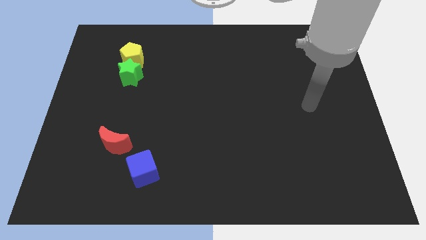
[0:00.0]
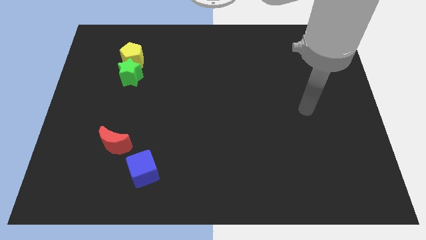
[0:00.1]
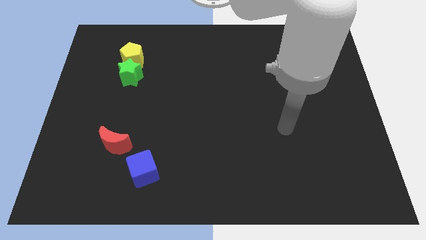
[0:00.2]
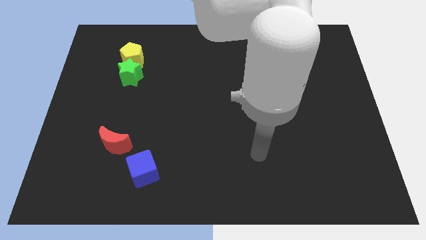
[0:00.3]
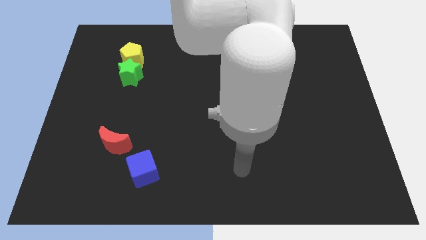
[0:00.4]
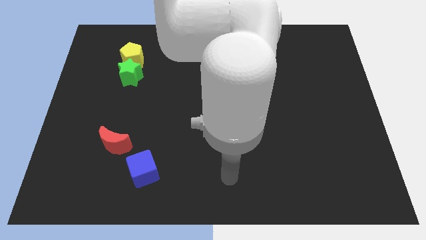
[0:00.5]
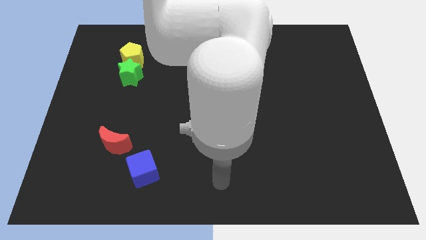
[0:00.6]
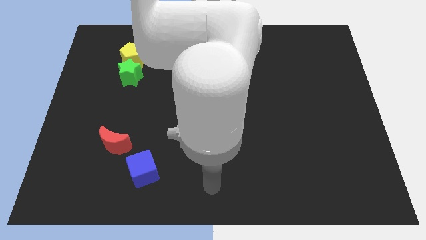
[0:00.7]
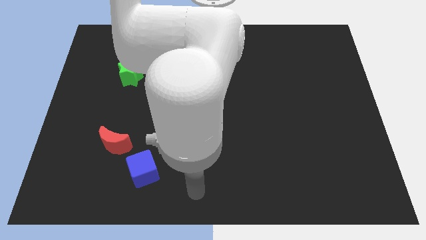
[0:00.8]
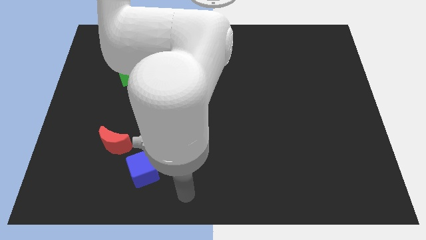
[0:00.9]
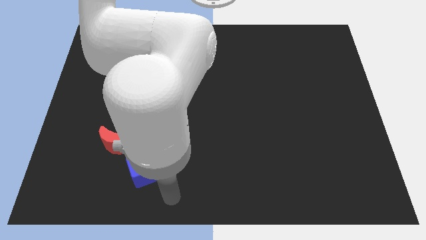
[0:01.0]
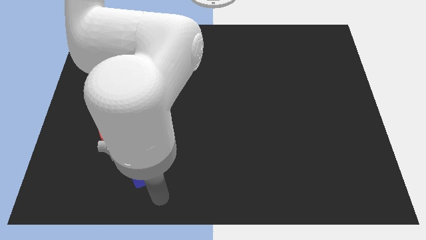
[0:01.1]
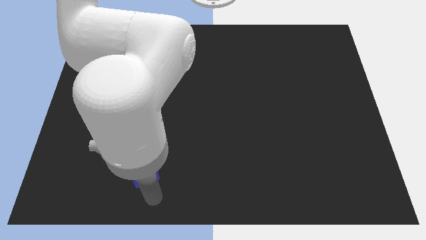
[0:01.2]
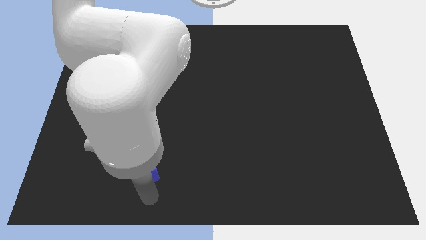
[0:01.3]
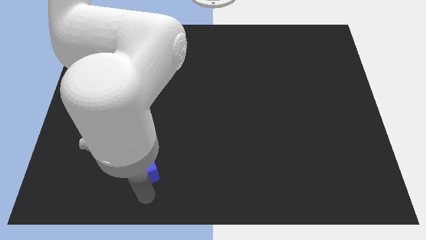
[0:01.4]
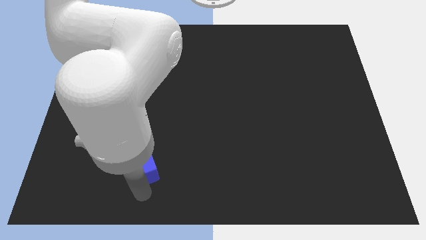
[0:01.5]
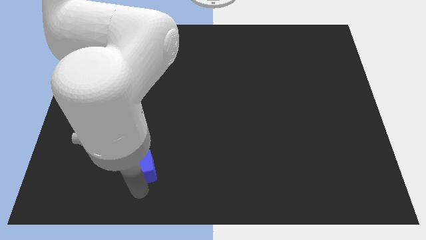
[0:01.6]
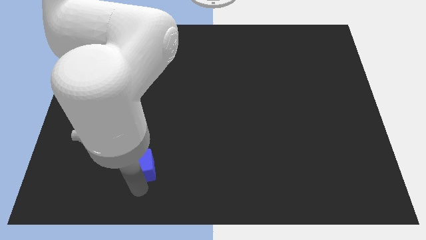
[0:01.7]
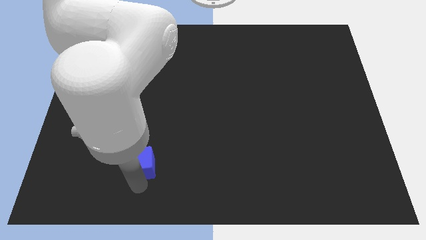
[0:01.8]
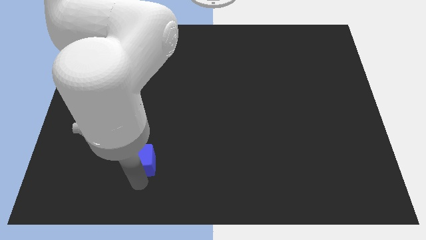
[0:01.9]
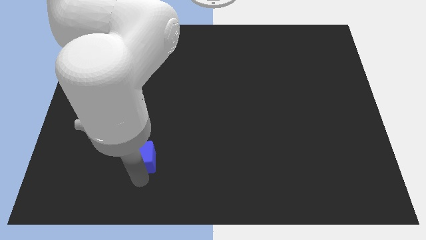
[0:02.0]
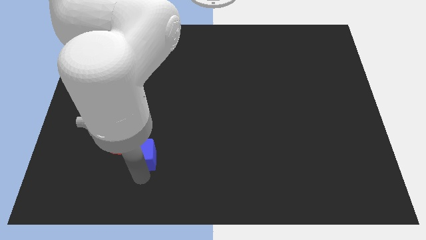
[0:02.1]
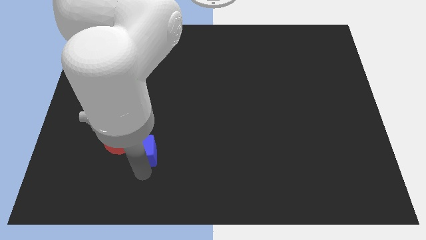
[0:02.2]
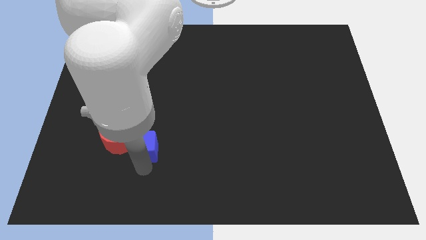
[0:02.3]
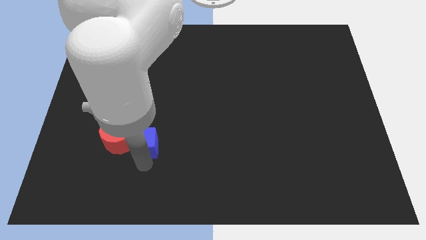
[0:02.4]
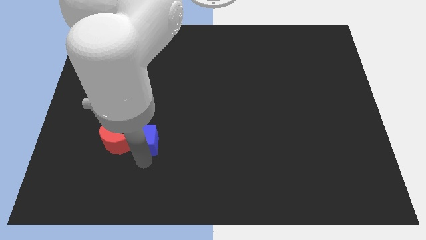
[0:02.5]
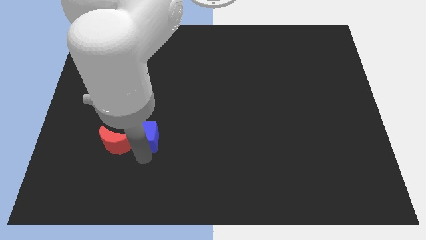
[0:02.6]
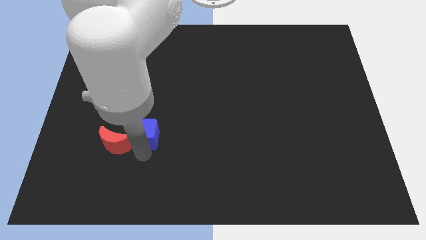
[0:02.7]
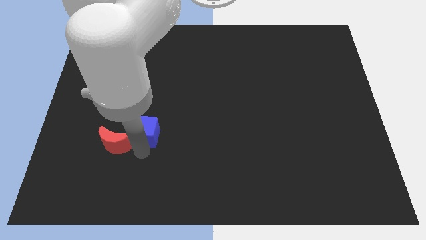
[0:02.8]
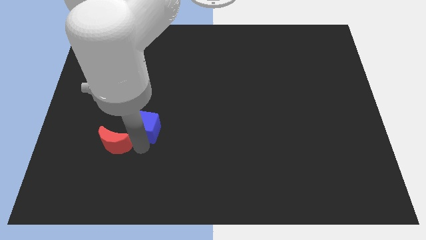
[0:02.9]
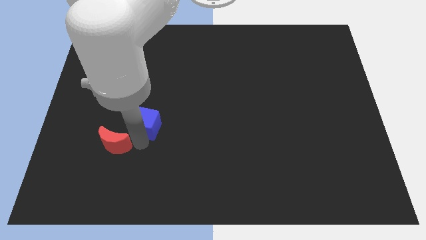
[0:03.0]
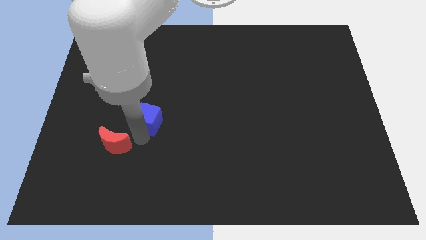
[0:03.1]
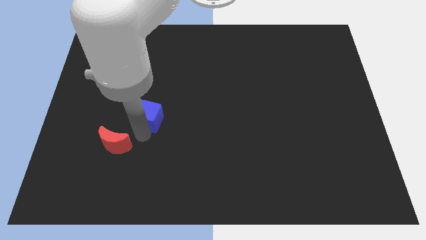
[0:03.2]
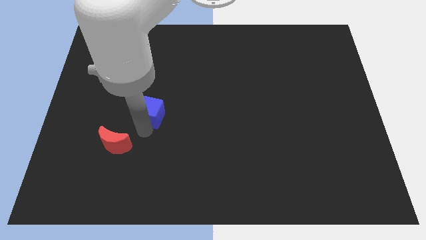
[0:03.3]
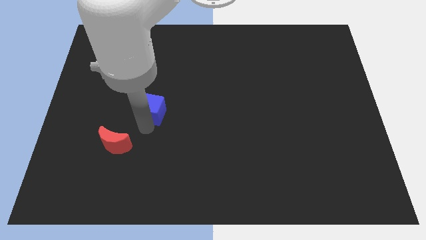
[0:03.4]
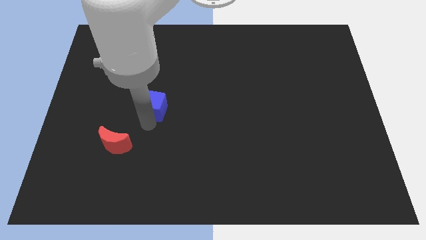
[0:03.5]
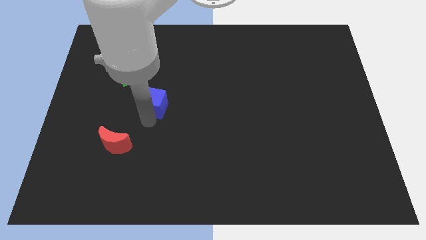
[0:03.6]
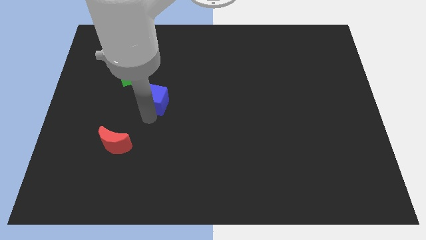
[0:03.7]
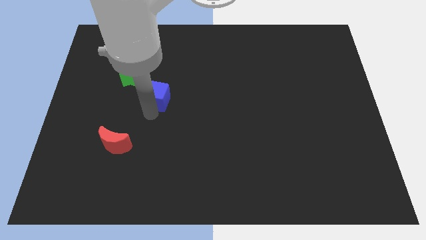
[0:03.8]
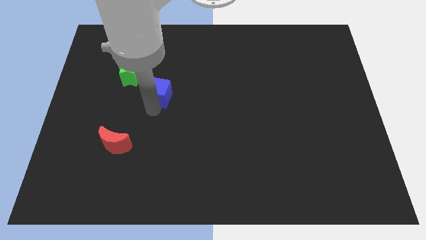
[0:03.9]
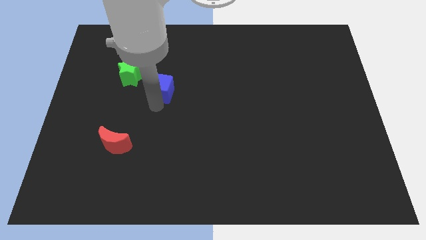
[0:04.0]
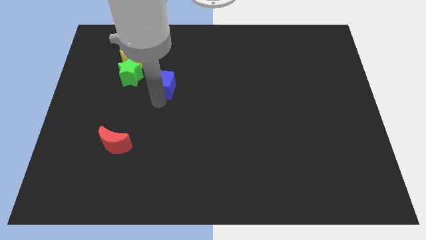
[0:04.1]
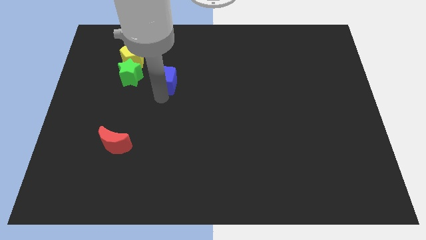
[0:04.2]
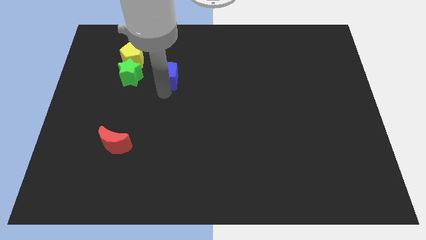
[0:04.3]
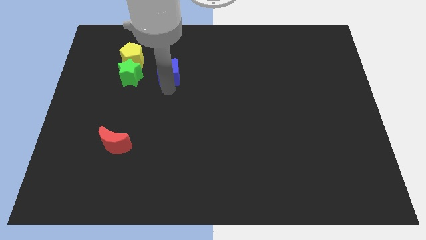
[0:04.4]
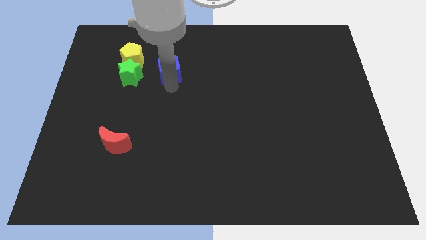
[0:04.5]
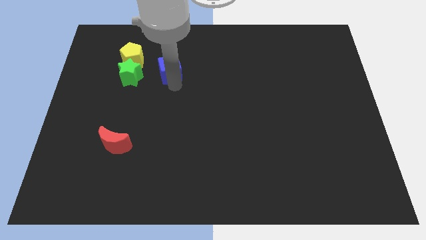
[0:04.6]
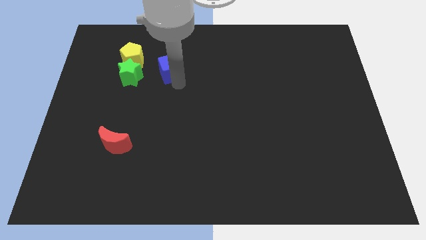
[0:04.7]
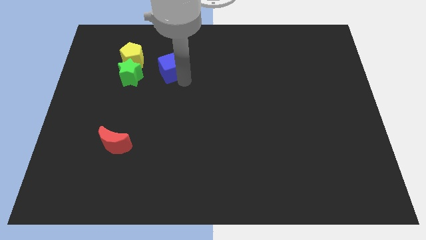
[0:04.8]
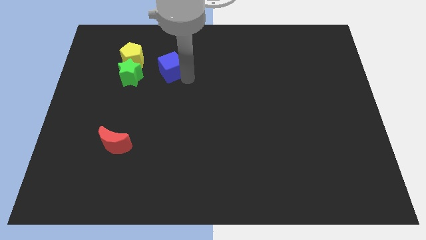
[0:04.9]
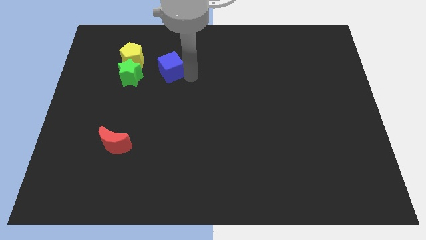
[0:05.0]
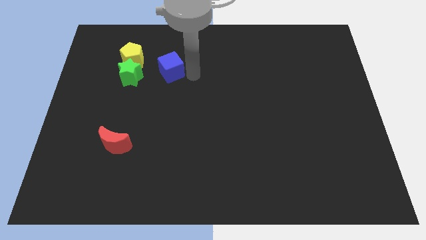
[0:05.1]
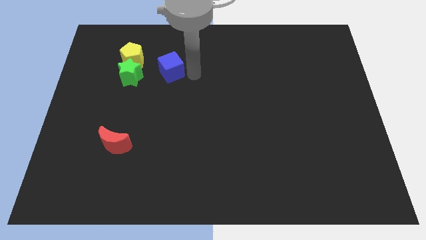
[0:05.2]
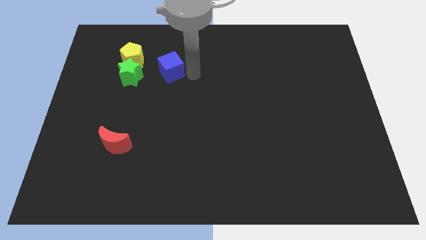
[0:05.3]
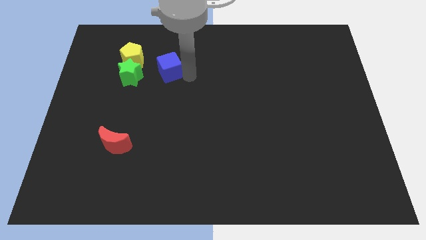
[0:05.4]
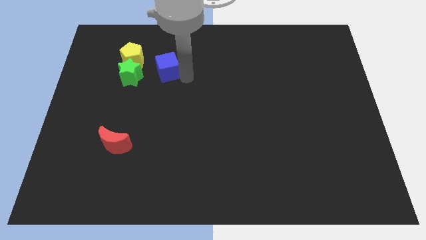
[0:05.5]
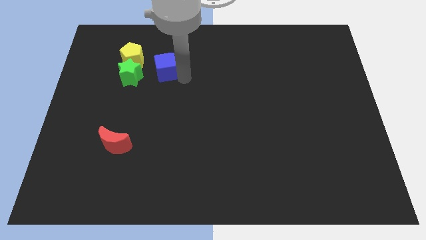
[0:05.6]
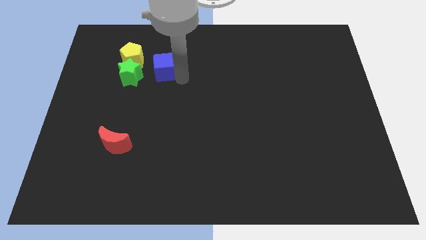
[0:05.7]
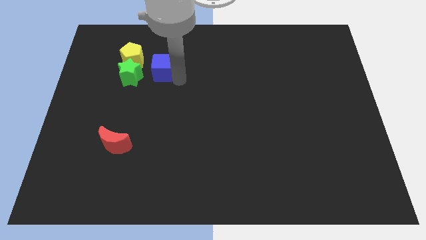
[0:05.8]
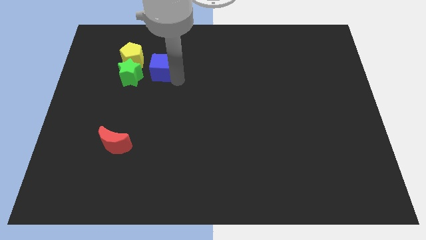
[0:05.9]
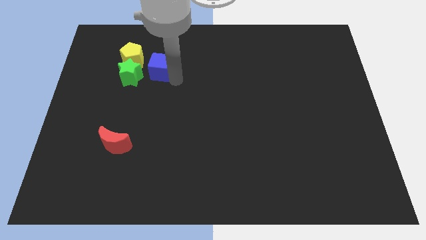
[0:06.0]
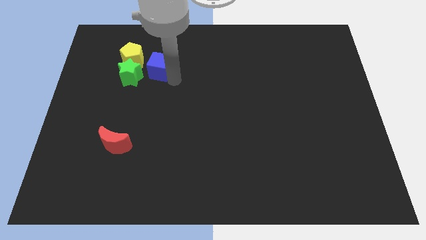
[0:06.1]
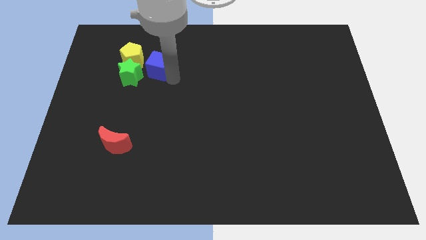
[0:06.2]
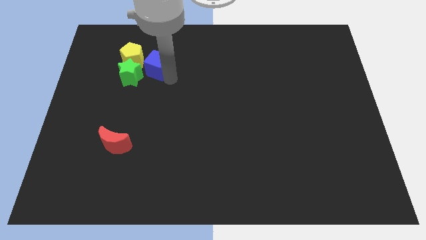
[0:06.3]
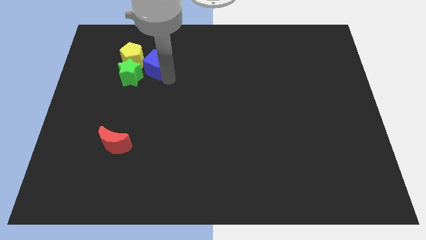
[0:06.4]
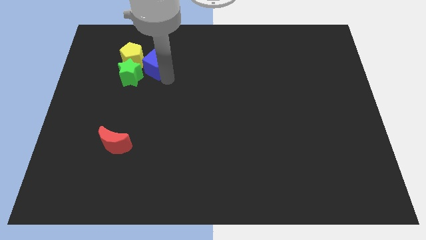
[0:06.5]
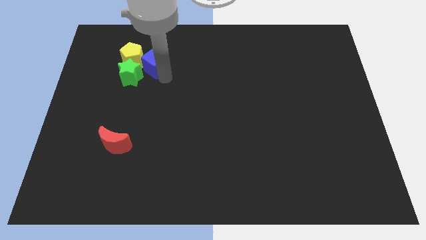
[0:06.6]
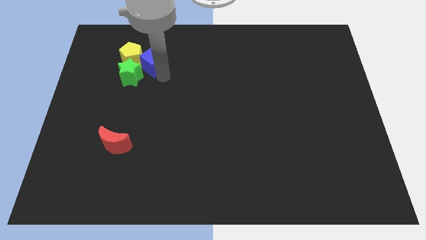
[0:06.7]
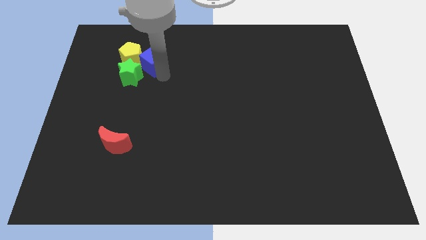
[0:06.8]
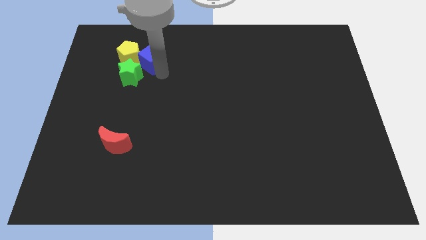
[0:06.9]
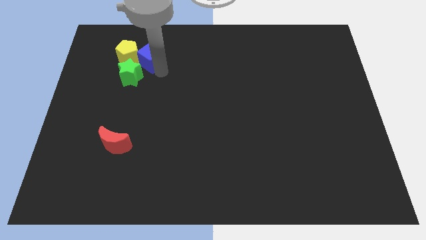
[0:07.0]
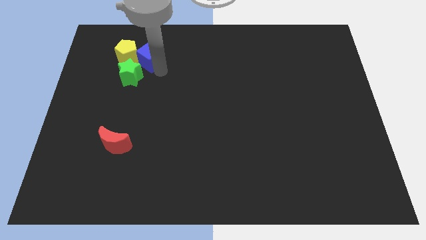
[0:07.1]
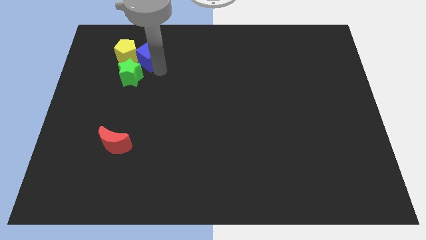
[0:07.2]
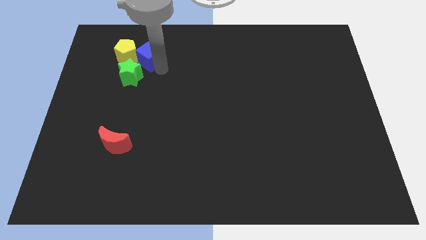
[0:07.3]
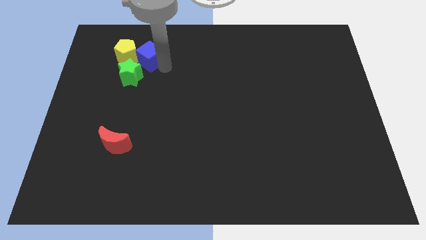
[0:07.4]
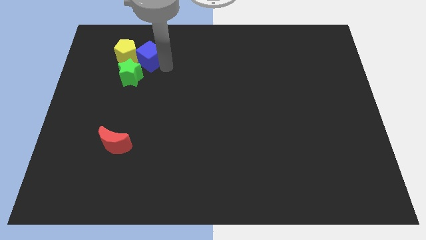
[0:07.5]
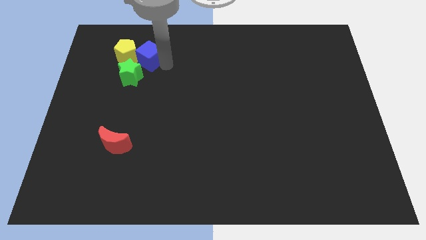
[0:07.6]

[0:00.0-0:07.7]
slide the cube to the yellow block

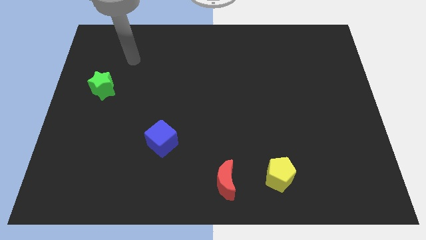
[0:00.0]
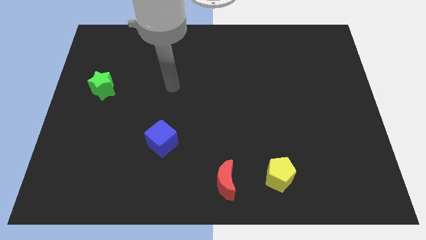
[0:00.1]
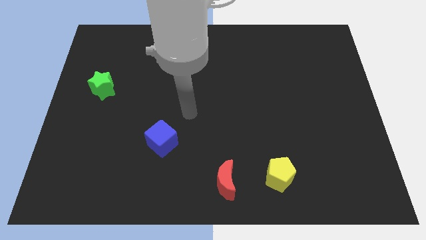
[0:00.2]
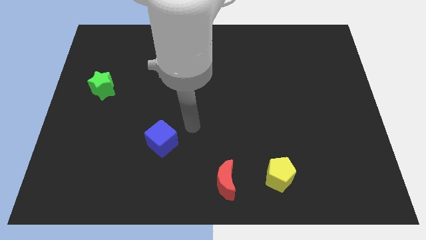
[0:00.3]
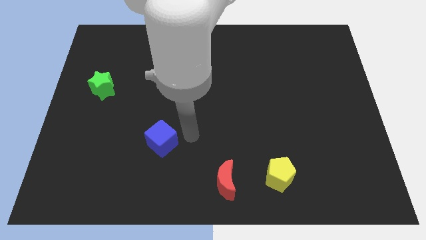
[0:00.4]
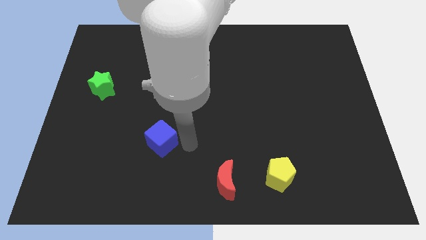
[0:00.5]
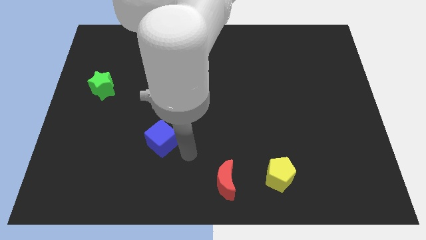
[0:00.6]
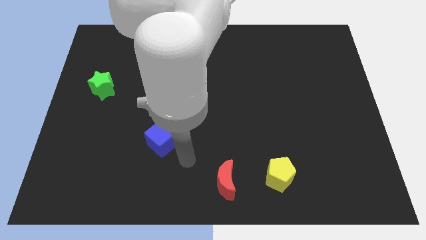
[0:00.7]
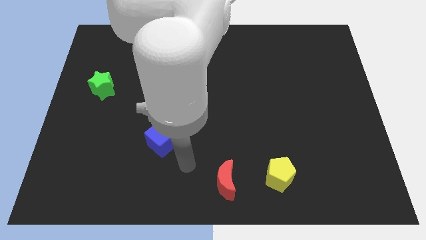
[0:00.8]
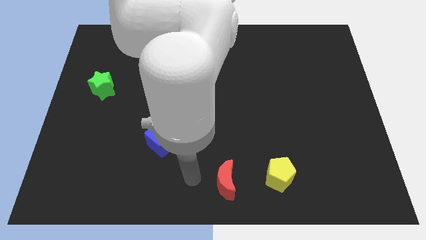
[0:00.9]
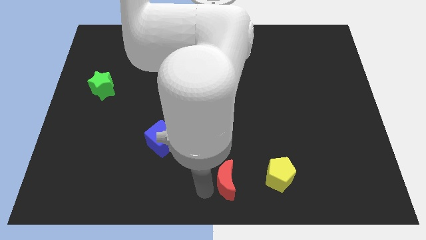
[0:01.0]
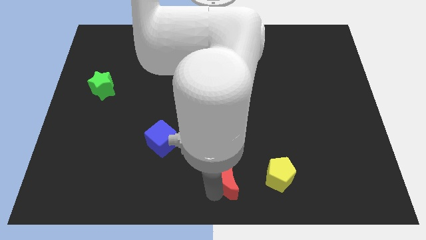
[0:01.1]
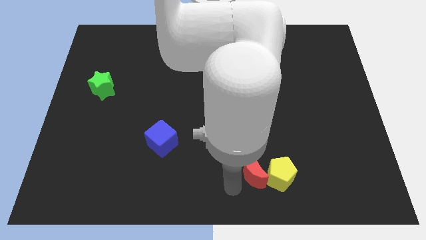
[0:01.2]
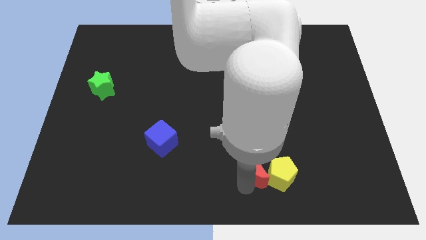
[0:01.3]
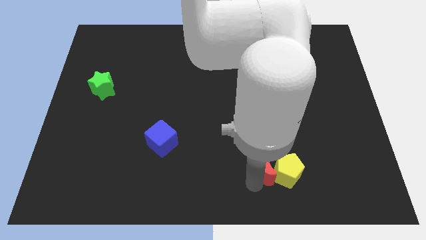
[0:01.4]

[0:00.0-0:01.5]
put the moon to the yellow pentagon
